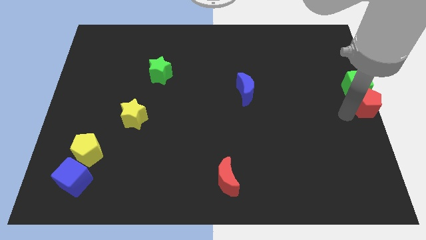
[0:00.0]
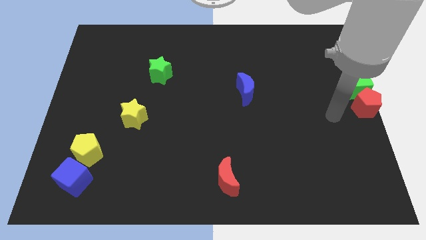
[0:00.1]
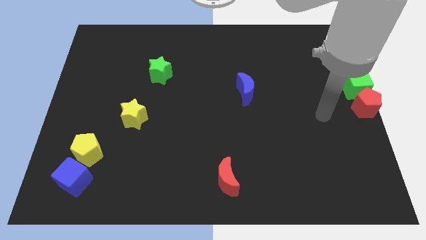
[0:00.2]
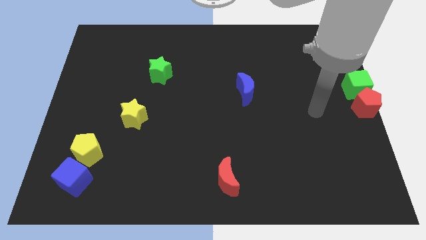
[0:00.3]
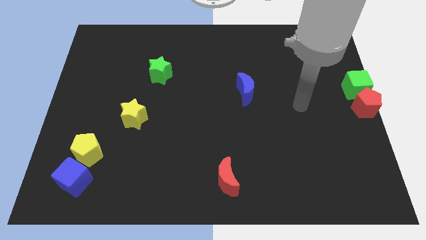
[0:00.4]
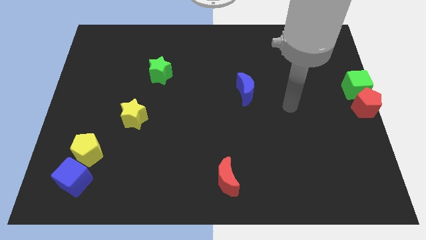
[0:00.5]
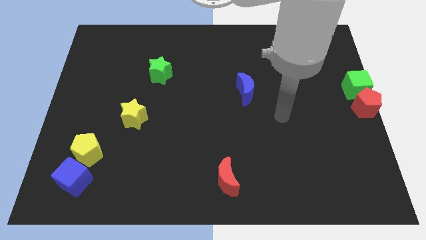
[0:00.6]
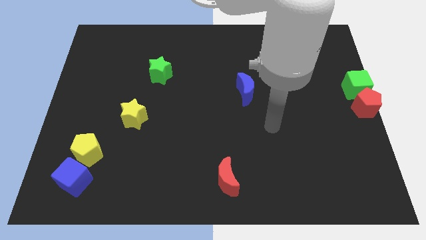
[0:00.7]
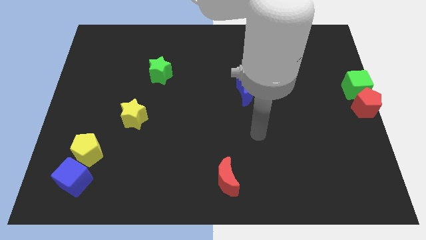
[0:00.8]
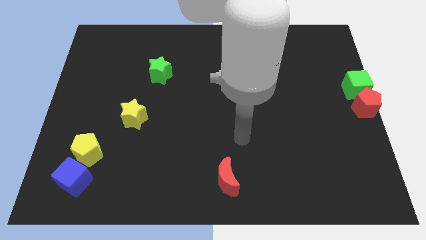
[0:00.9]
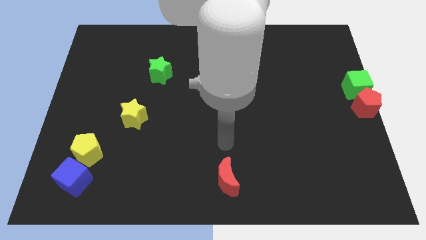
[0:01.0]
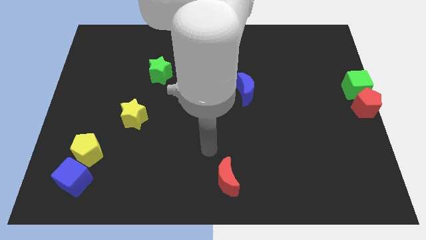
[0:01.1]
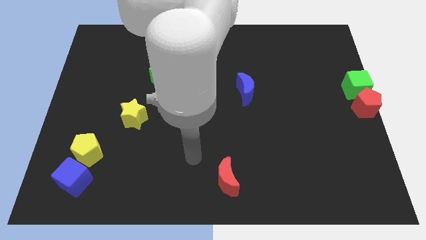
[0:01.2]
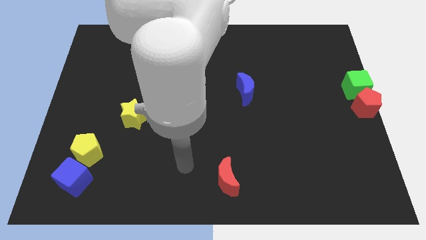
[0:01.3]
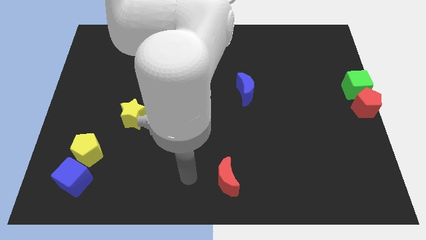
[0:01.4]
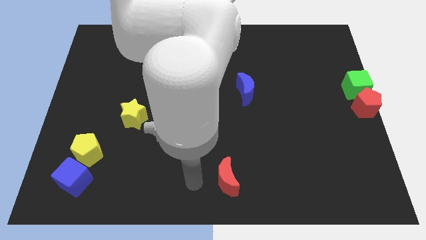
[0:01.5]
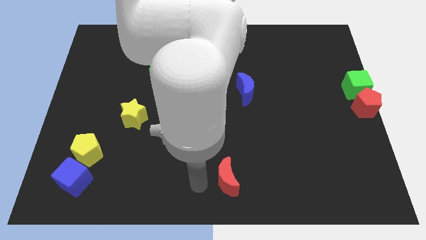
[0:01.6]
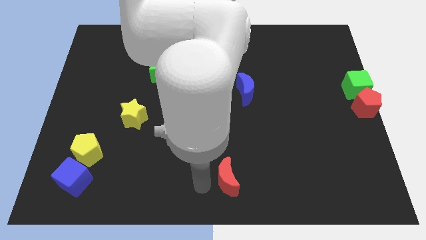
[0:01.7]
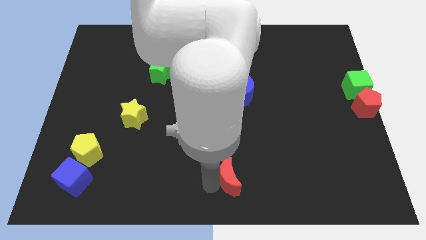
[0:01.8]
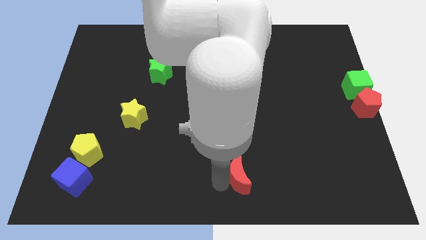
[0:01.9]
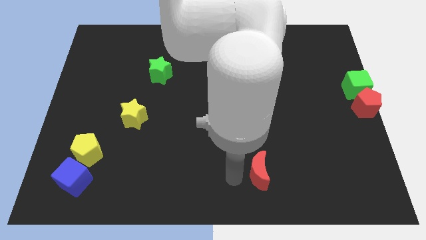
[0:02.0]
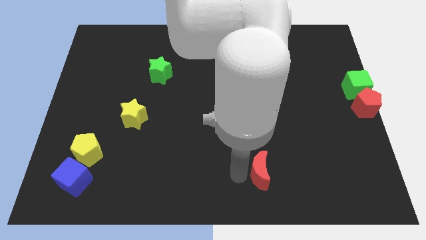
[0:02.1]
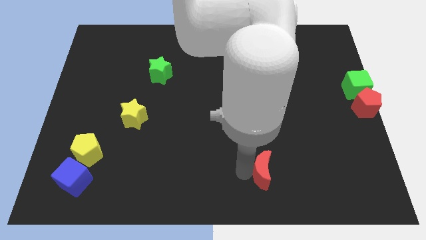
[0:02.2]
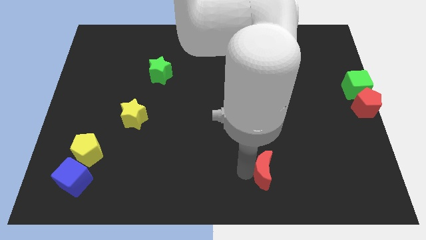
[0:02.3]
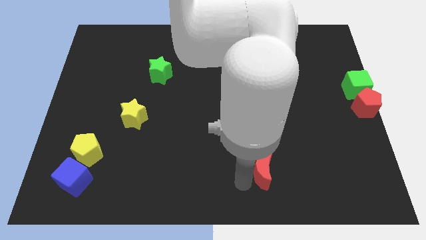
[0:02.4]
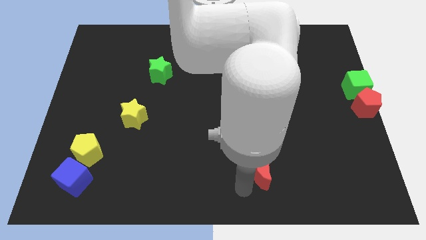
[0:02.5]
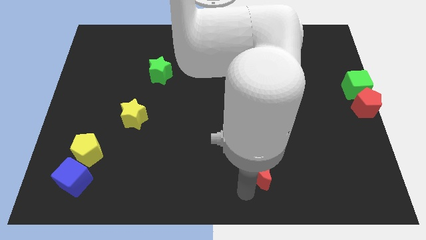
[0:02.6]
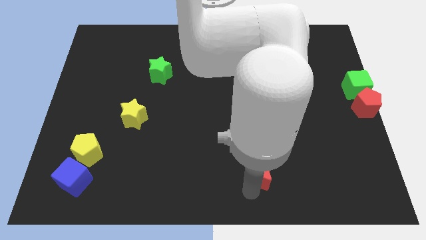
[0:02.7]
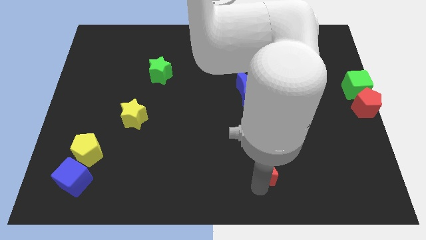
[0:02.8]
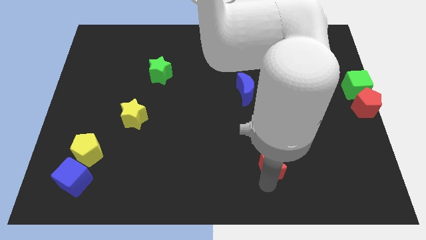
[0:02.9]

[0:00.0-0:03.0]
move your arm away from the red pentagon

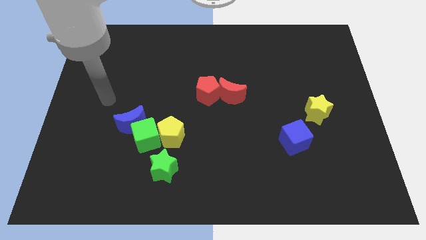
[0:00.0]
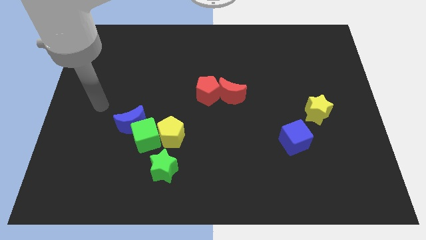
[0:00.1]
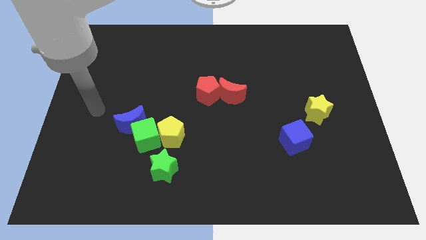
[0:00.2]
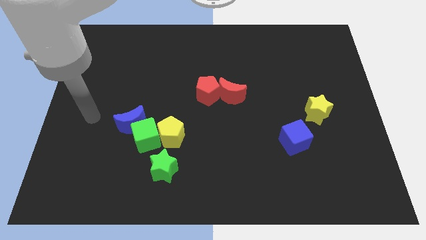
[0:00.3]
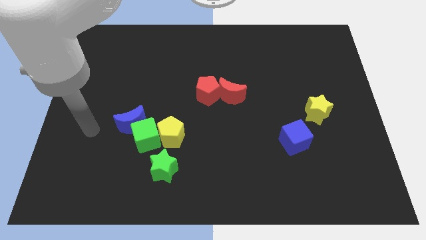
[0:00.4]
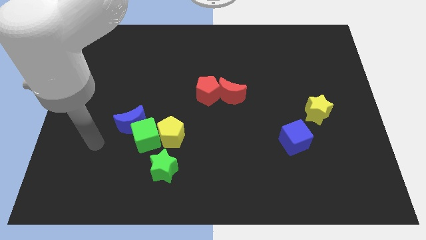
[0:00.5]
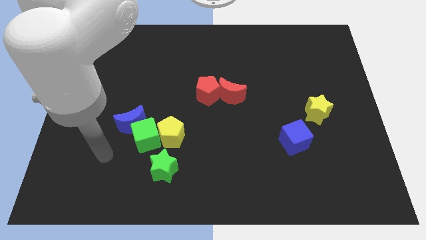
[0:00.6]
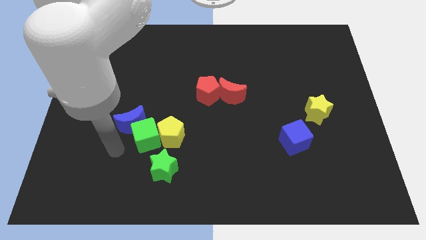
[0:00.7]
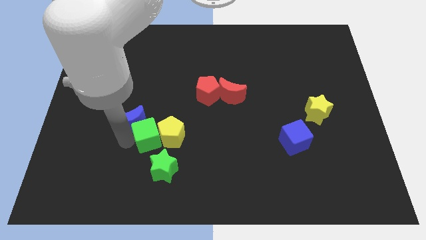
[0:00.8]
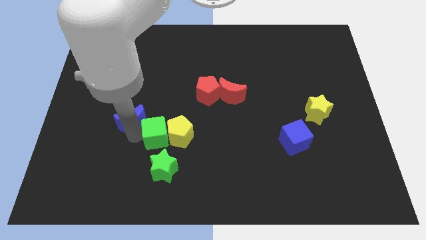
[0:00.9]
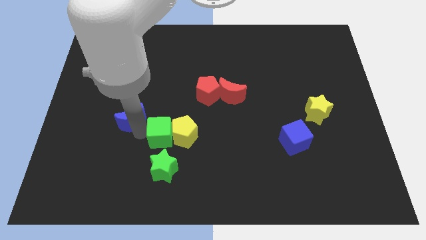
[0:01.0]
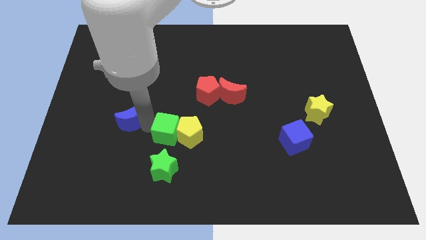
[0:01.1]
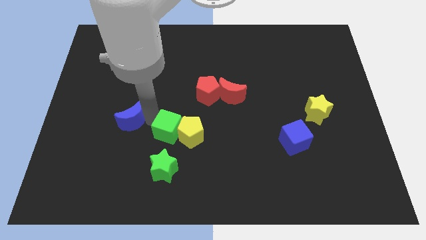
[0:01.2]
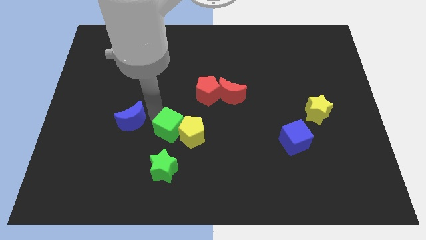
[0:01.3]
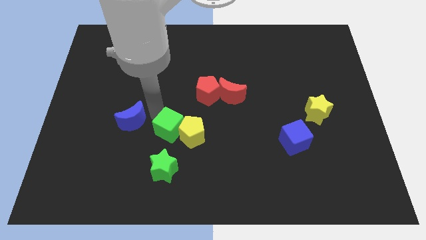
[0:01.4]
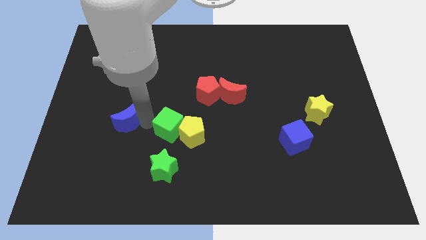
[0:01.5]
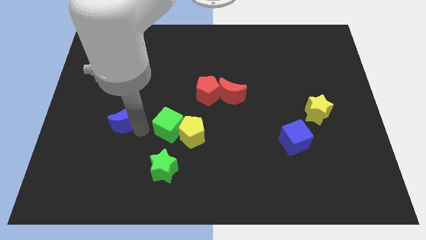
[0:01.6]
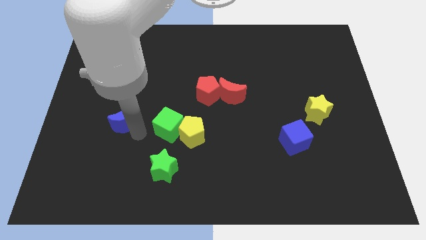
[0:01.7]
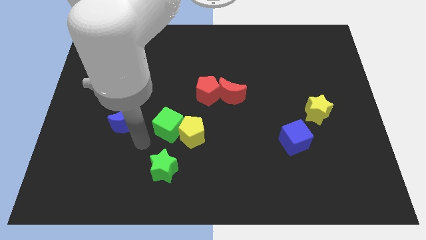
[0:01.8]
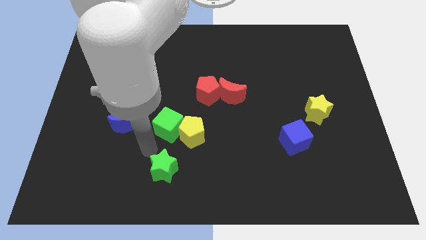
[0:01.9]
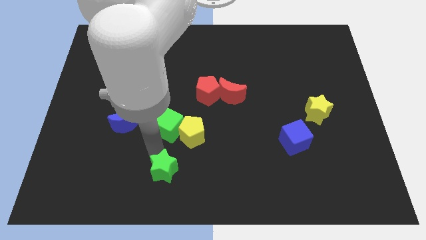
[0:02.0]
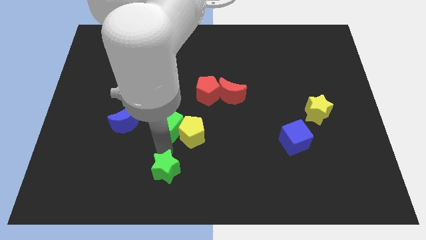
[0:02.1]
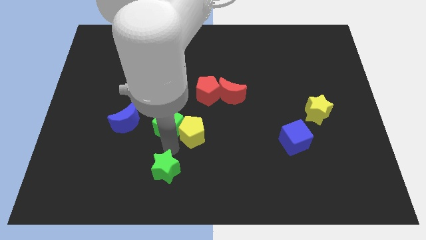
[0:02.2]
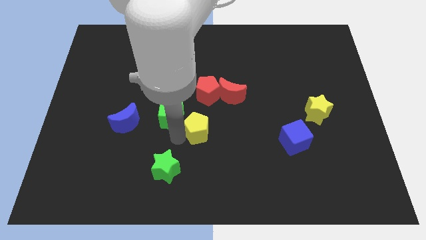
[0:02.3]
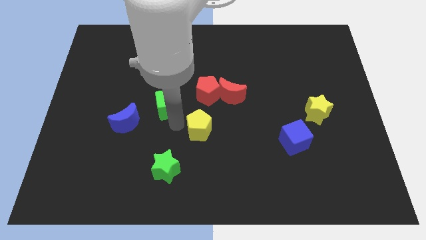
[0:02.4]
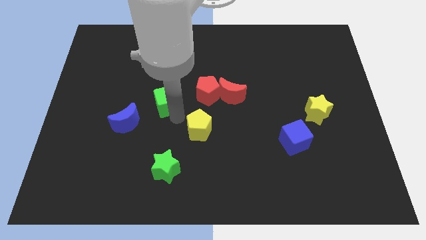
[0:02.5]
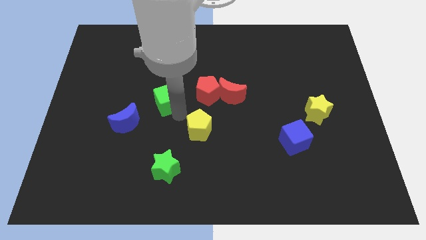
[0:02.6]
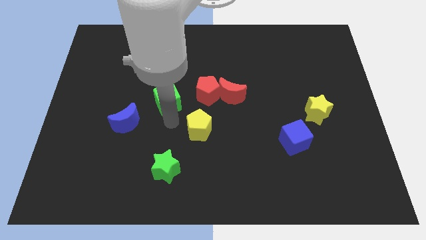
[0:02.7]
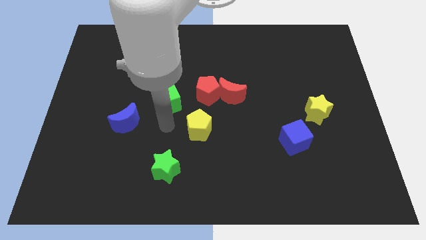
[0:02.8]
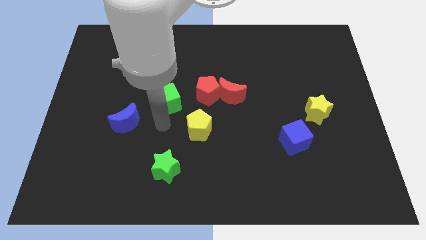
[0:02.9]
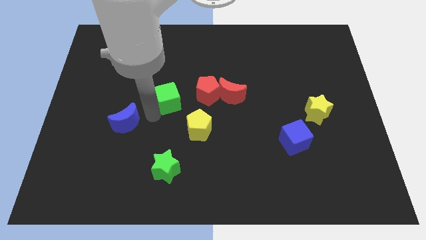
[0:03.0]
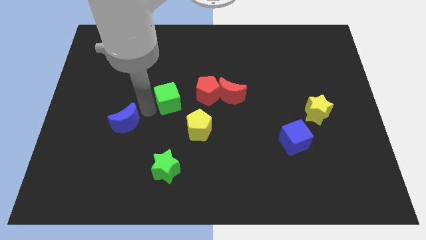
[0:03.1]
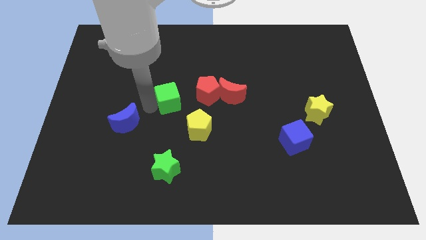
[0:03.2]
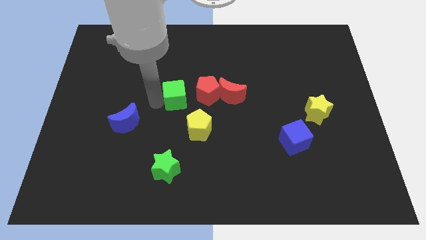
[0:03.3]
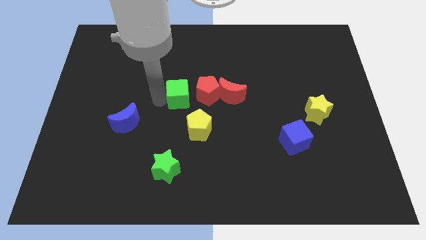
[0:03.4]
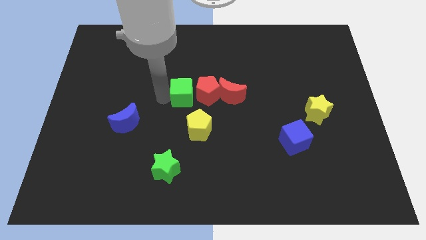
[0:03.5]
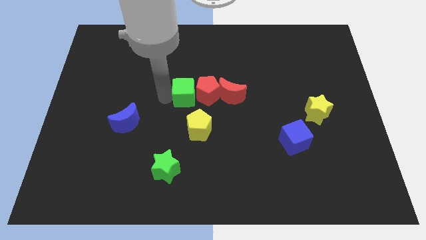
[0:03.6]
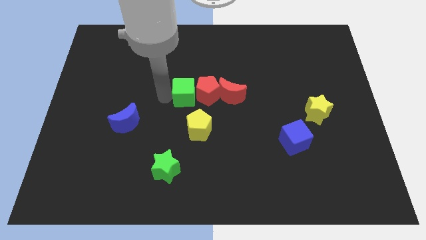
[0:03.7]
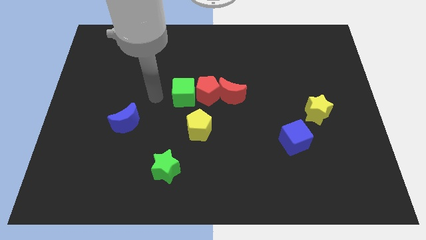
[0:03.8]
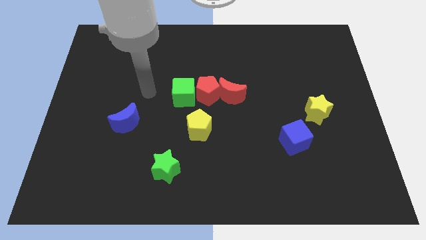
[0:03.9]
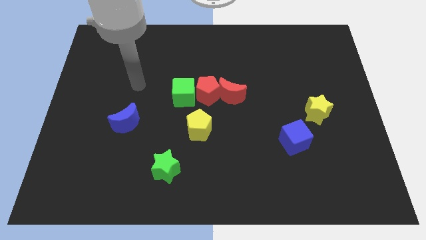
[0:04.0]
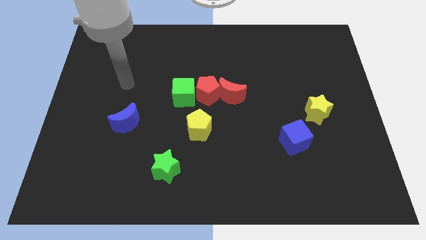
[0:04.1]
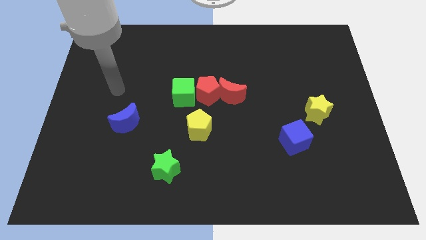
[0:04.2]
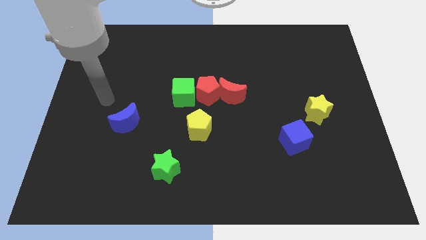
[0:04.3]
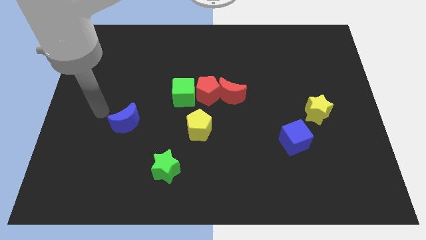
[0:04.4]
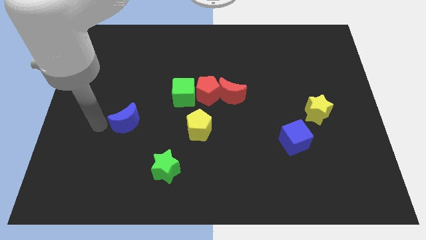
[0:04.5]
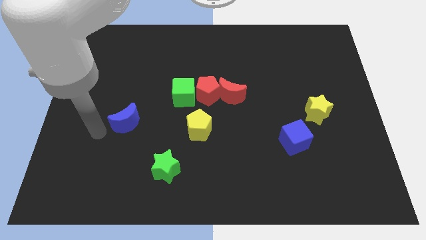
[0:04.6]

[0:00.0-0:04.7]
place green cube to the left of red pentagon

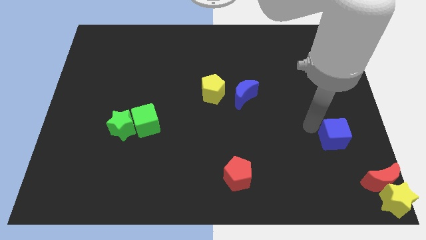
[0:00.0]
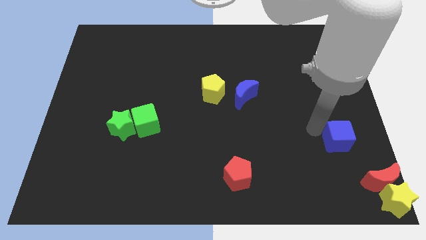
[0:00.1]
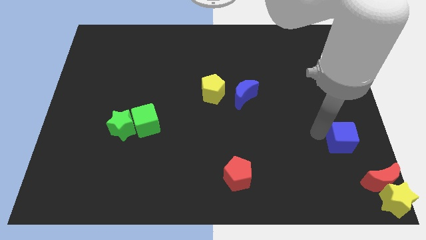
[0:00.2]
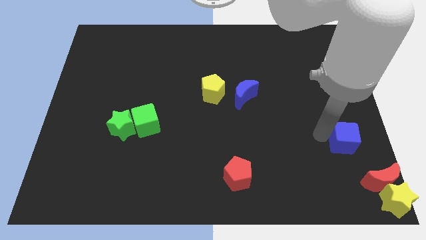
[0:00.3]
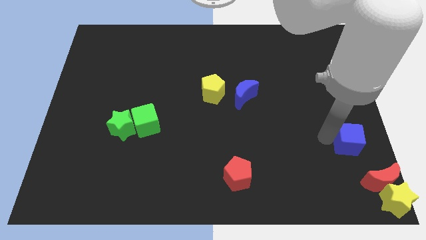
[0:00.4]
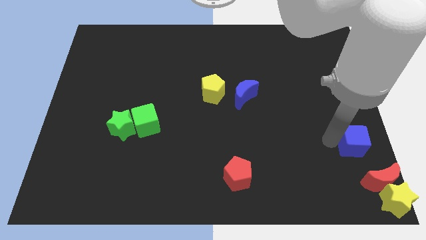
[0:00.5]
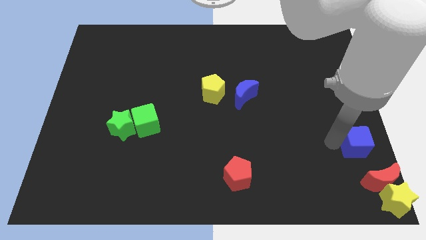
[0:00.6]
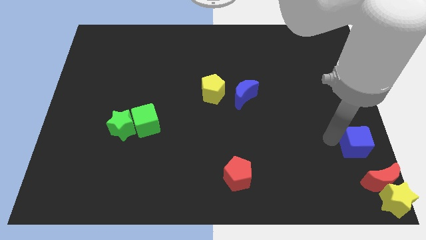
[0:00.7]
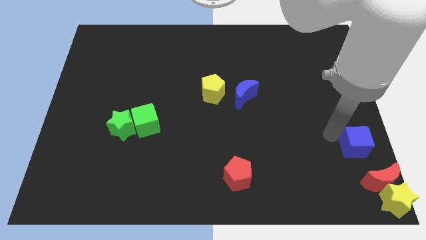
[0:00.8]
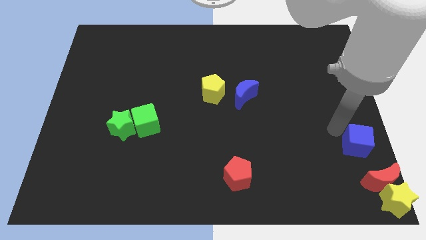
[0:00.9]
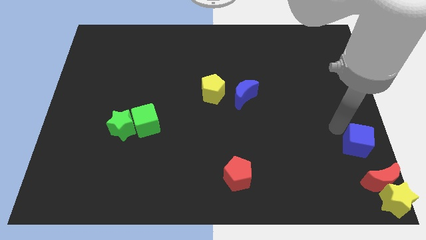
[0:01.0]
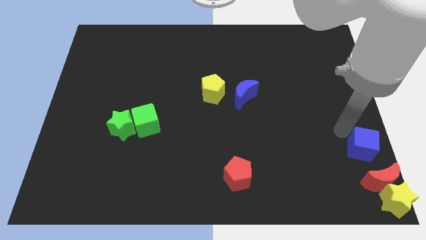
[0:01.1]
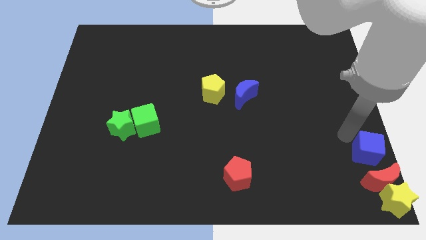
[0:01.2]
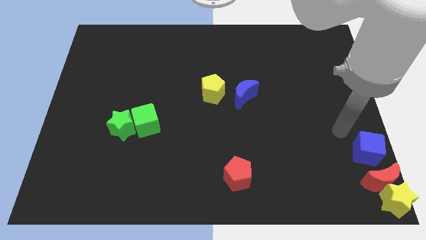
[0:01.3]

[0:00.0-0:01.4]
put the blue cube to the top left side of the red crescent
